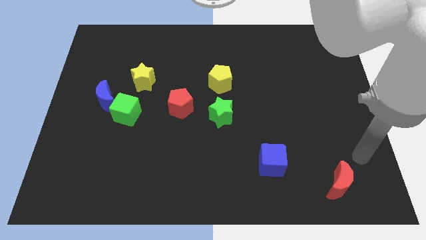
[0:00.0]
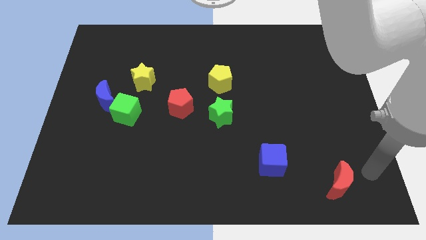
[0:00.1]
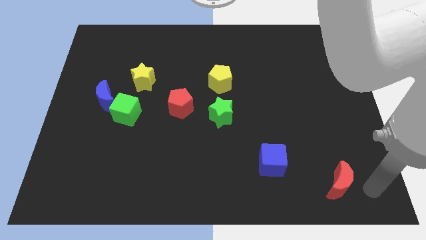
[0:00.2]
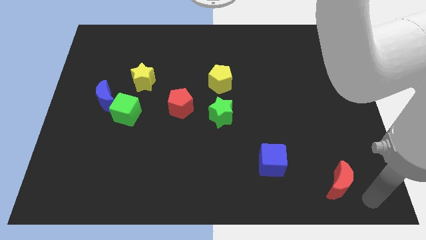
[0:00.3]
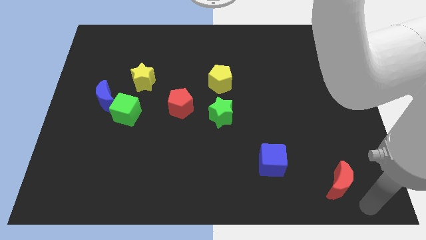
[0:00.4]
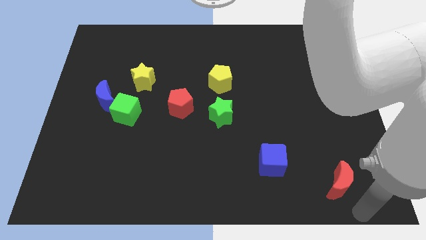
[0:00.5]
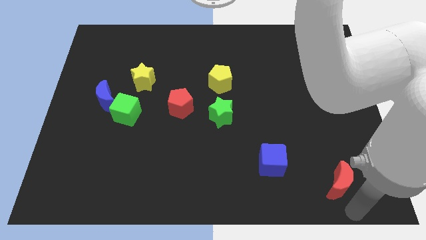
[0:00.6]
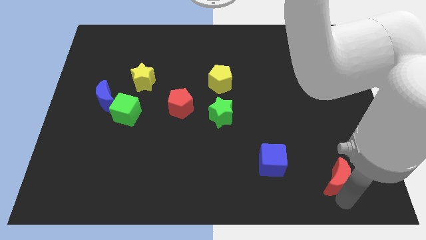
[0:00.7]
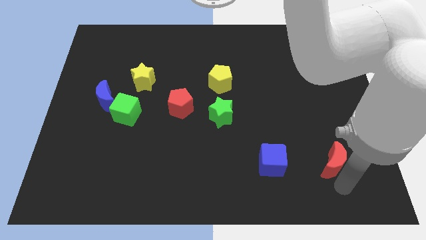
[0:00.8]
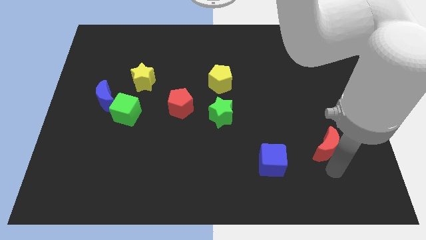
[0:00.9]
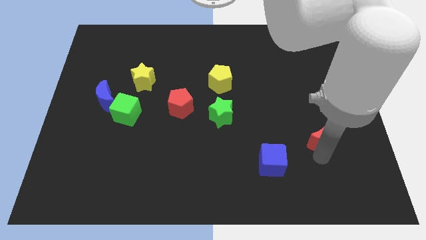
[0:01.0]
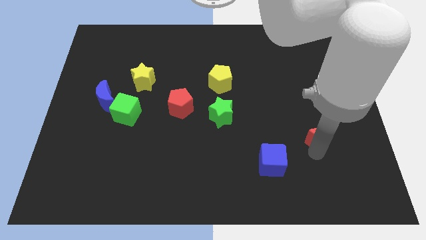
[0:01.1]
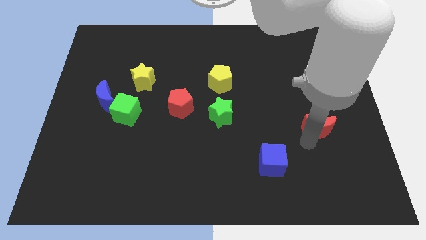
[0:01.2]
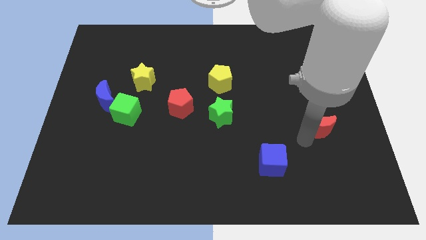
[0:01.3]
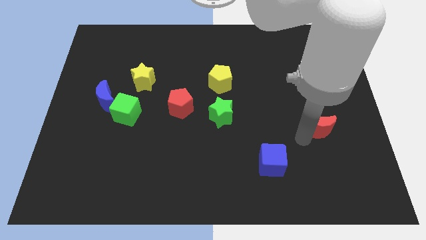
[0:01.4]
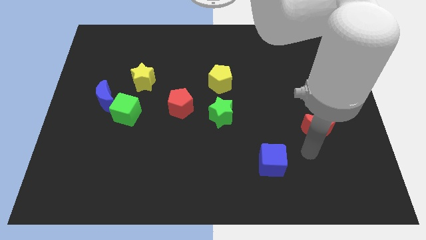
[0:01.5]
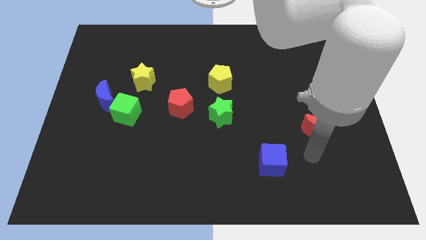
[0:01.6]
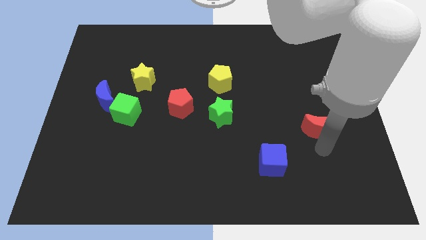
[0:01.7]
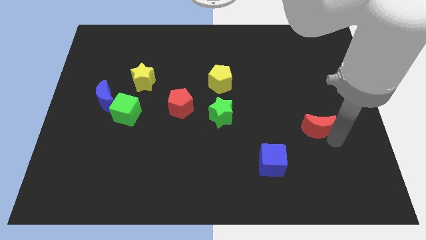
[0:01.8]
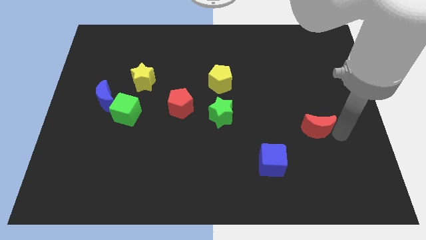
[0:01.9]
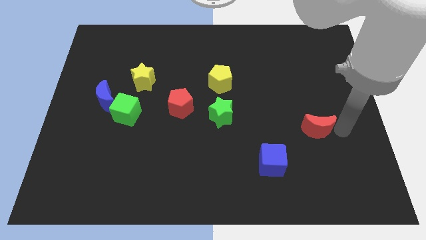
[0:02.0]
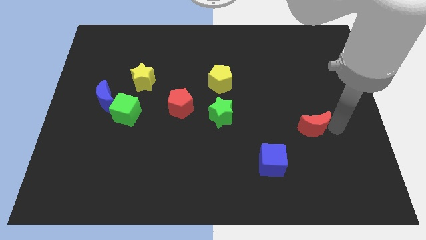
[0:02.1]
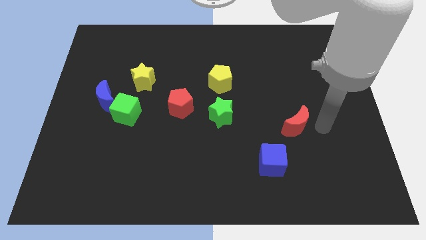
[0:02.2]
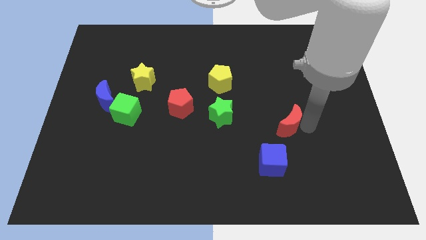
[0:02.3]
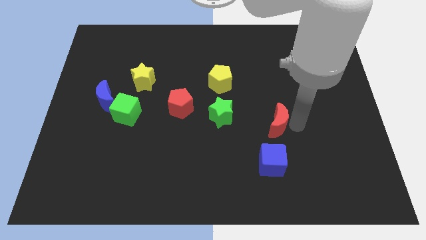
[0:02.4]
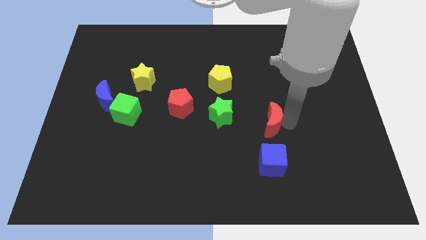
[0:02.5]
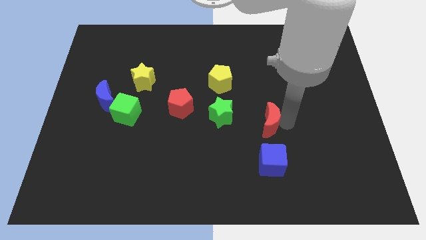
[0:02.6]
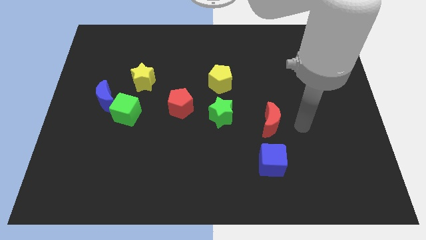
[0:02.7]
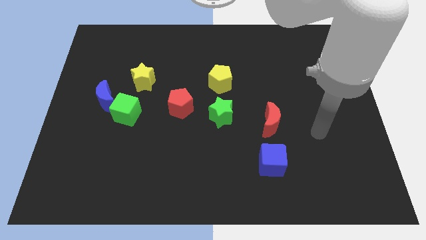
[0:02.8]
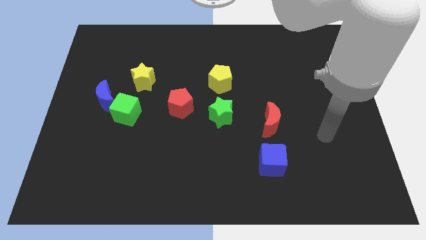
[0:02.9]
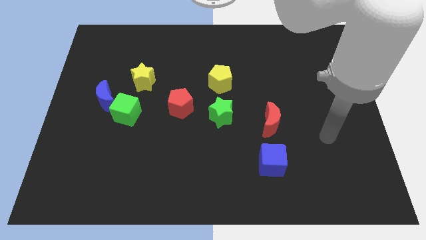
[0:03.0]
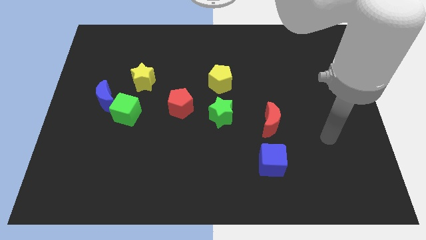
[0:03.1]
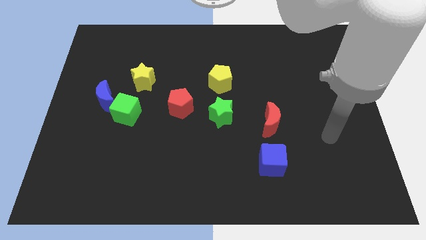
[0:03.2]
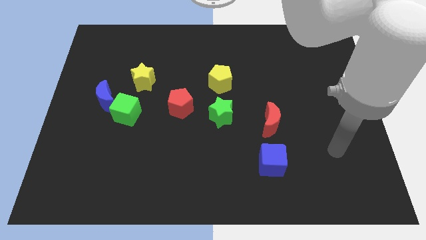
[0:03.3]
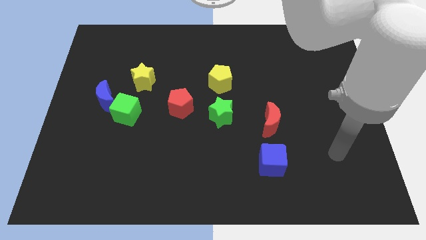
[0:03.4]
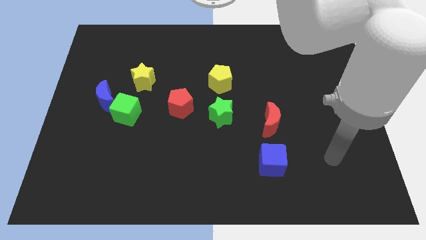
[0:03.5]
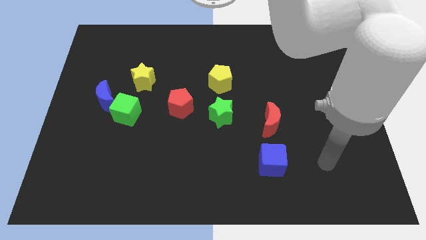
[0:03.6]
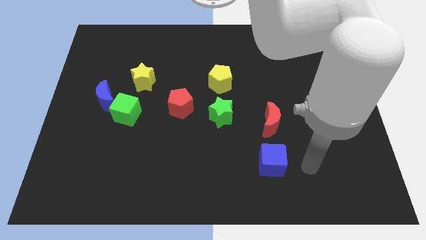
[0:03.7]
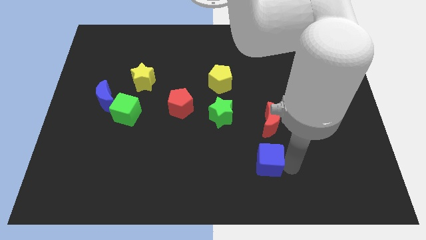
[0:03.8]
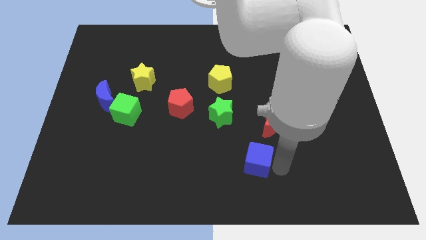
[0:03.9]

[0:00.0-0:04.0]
move the red crescent to the right of the green star

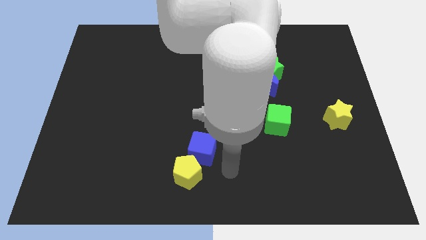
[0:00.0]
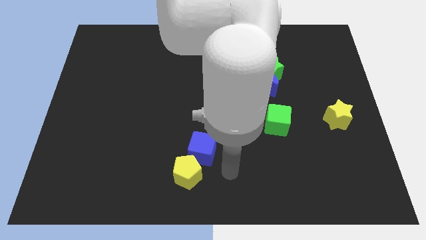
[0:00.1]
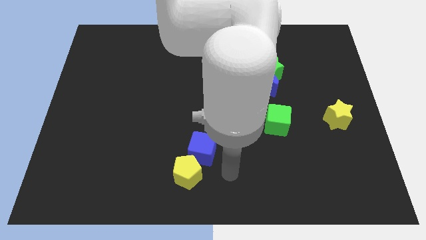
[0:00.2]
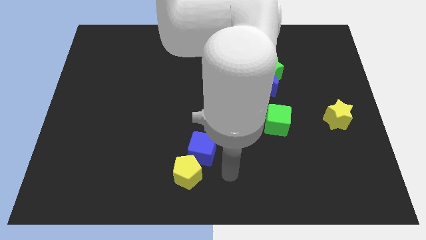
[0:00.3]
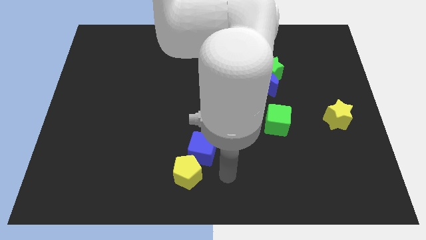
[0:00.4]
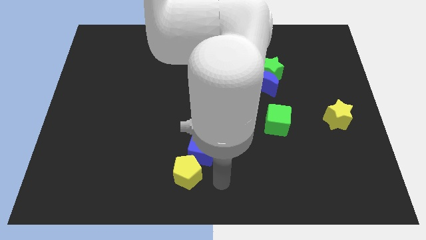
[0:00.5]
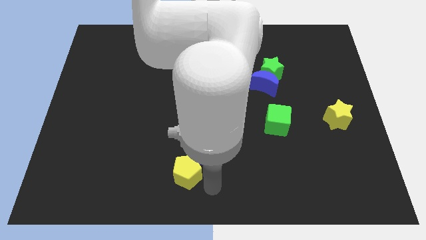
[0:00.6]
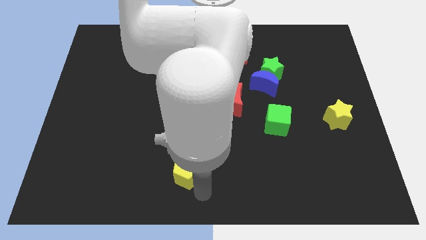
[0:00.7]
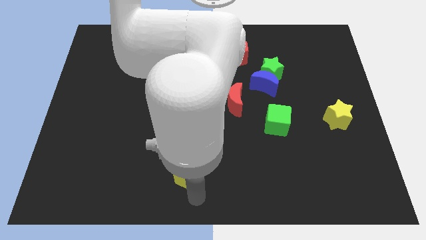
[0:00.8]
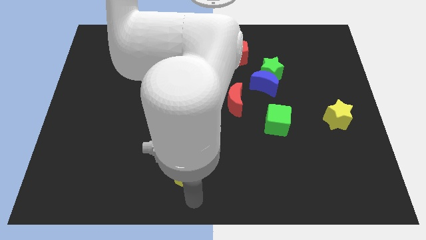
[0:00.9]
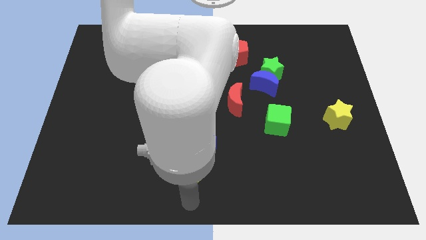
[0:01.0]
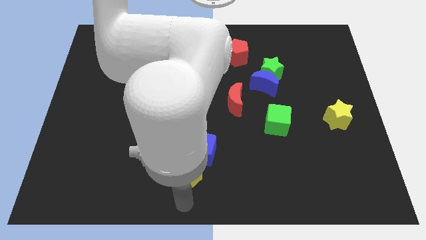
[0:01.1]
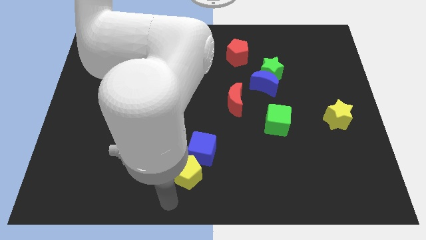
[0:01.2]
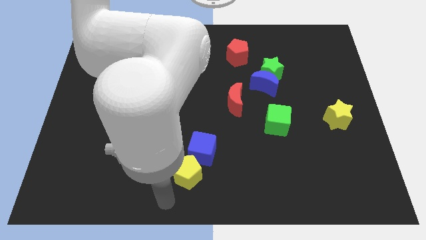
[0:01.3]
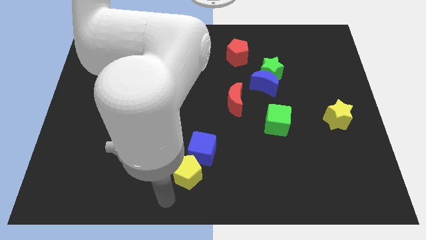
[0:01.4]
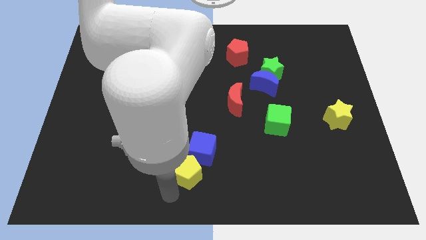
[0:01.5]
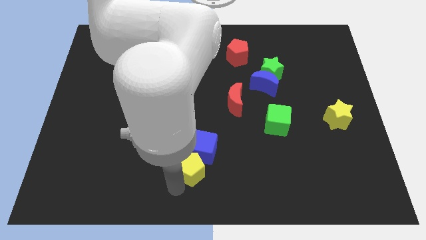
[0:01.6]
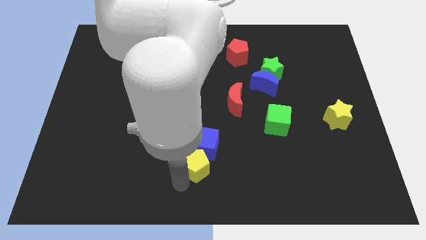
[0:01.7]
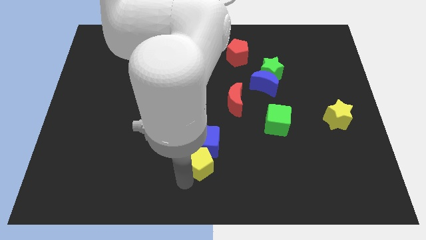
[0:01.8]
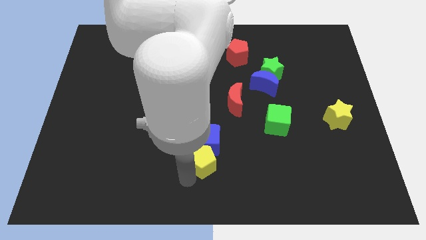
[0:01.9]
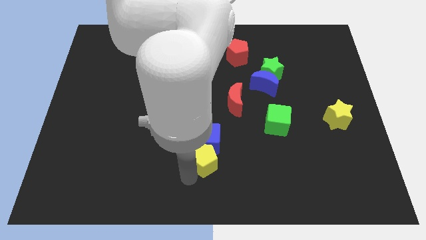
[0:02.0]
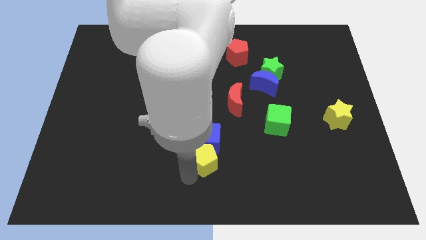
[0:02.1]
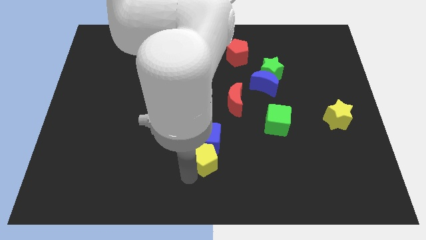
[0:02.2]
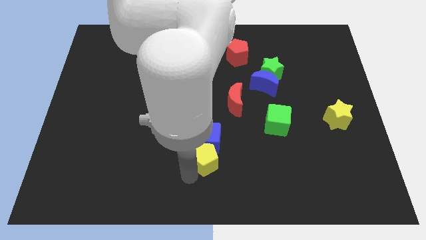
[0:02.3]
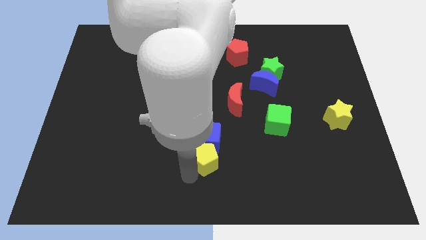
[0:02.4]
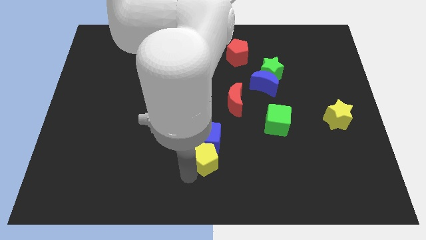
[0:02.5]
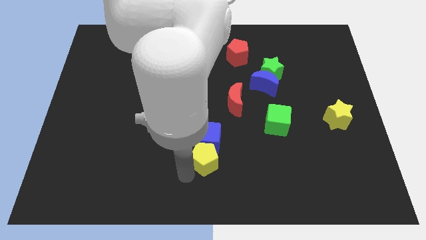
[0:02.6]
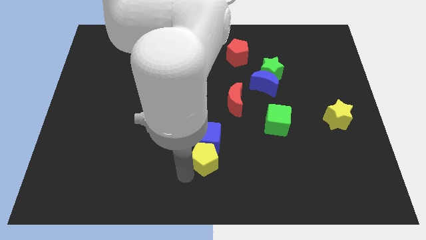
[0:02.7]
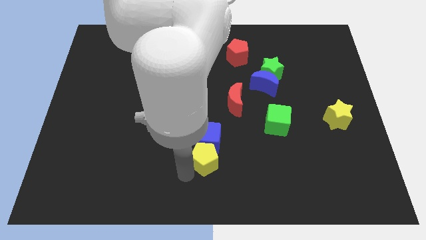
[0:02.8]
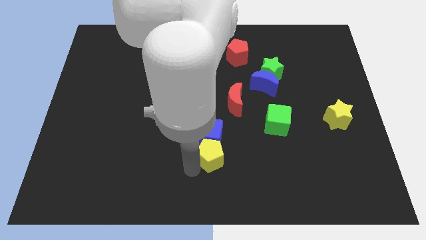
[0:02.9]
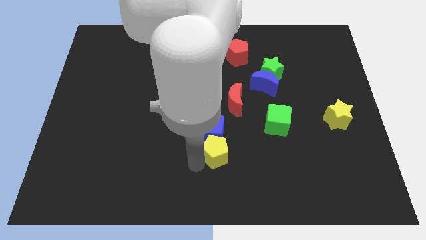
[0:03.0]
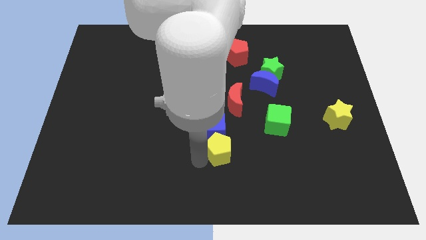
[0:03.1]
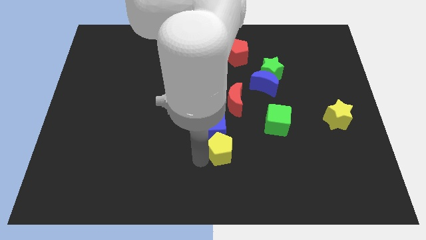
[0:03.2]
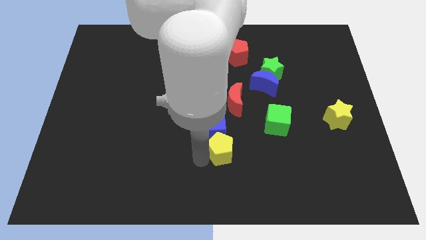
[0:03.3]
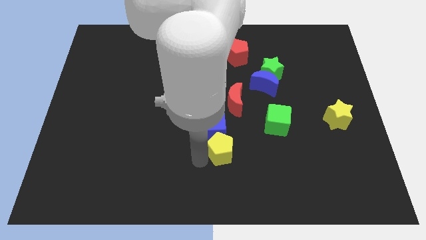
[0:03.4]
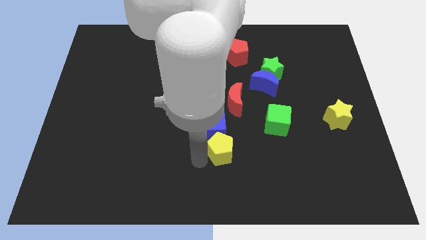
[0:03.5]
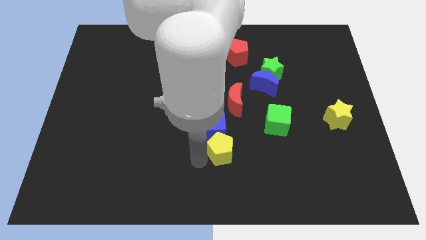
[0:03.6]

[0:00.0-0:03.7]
push the yellow pentagon and blue cube to the top side

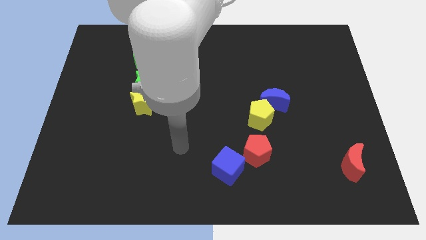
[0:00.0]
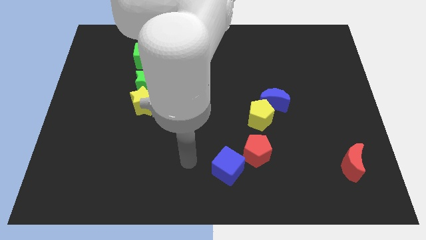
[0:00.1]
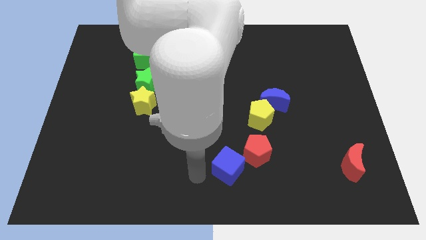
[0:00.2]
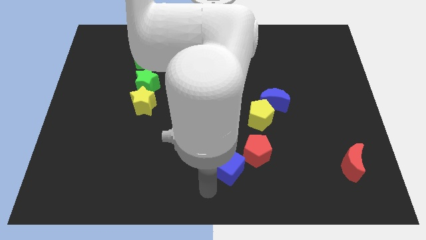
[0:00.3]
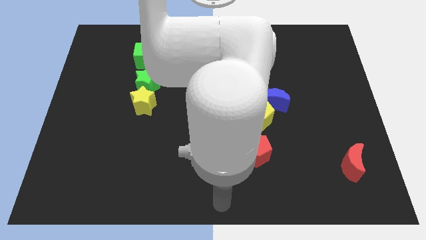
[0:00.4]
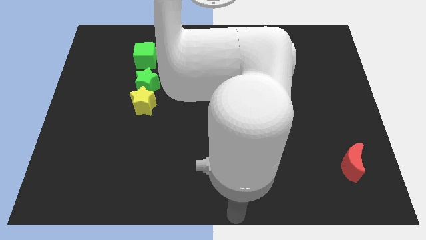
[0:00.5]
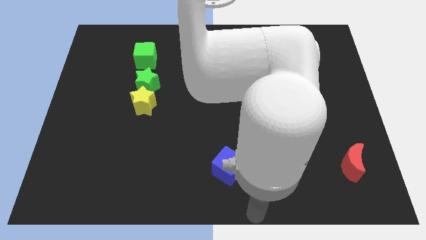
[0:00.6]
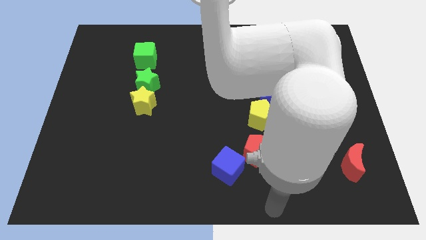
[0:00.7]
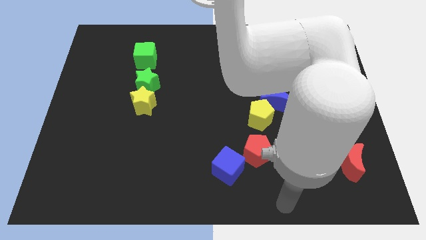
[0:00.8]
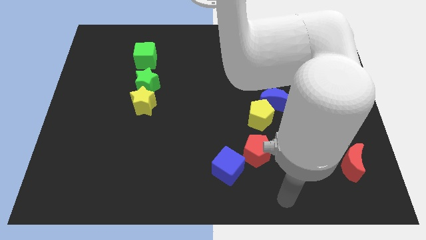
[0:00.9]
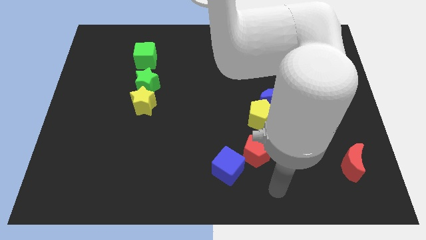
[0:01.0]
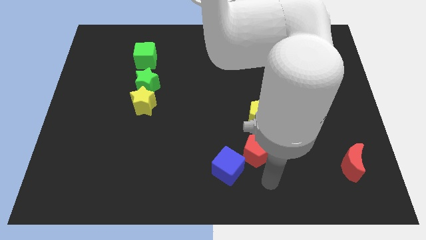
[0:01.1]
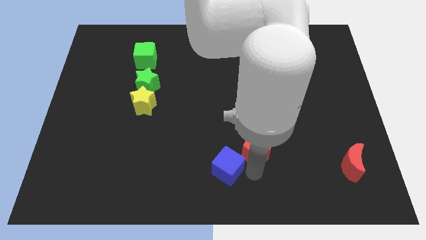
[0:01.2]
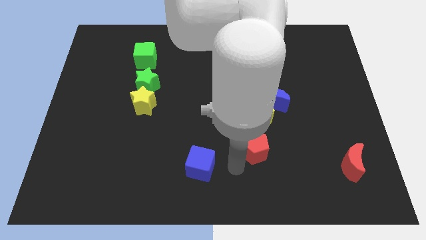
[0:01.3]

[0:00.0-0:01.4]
place your arm to the bottom of red pentagon
